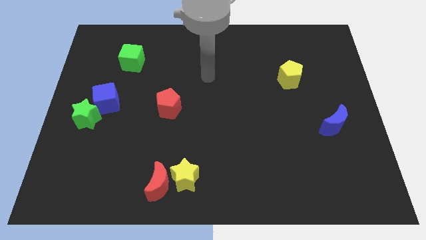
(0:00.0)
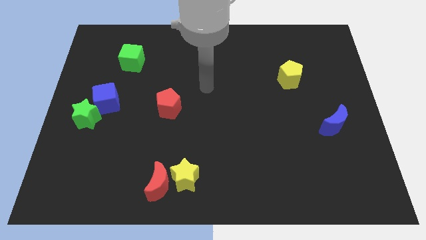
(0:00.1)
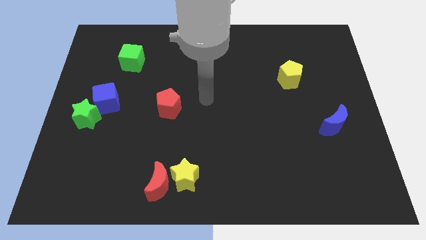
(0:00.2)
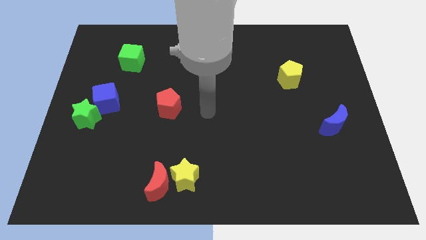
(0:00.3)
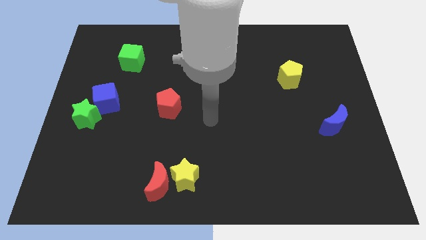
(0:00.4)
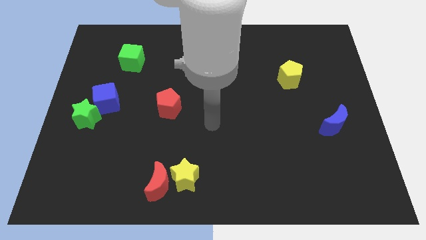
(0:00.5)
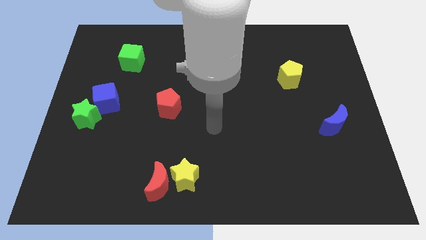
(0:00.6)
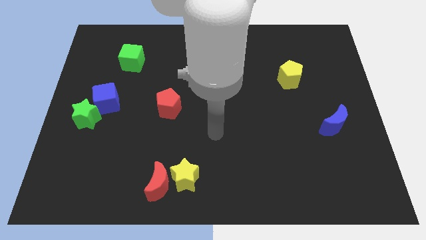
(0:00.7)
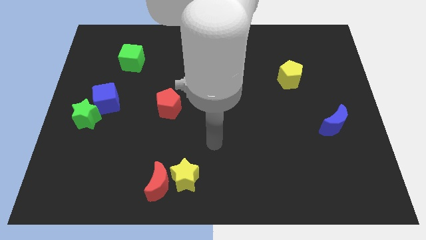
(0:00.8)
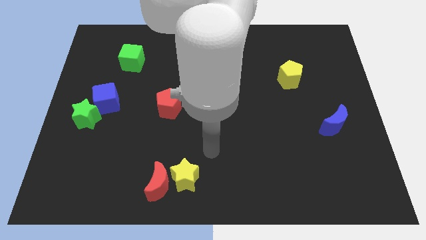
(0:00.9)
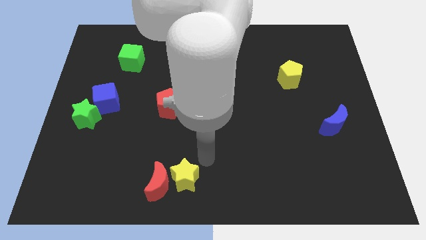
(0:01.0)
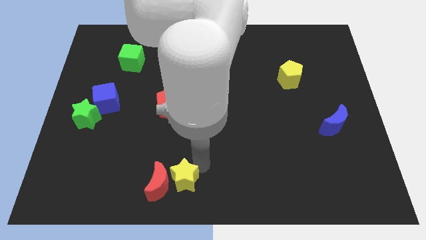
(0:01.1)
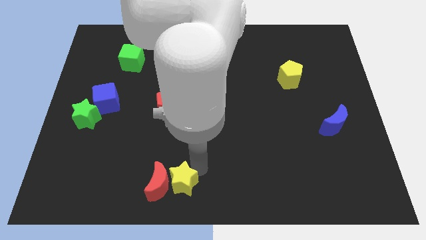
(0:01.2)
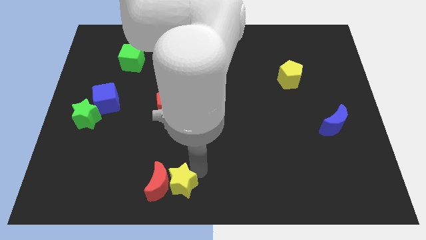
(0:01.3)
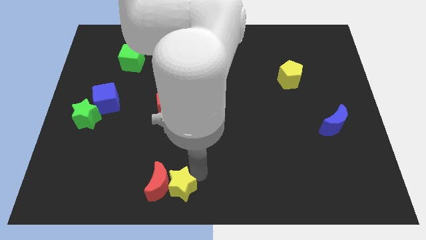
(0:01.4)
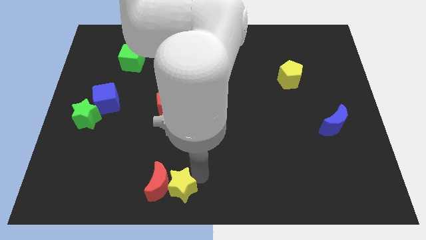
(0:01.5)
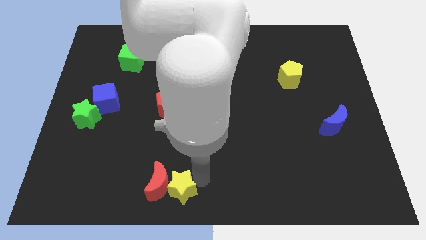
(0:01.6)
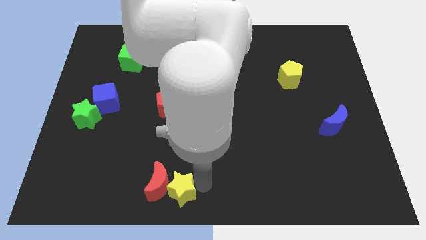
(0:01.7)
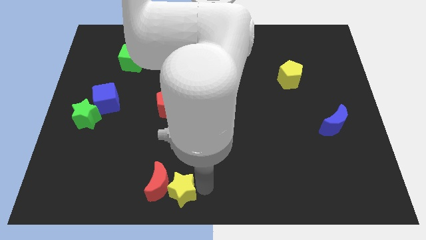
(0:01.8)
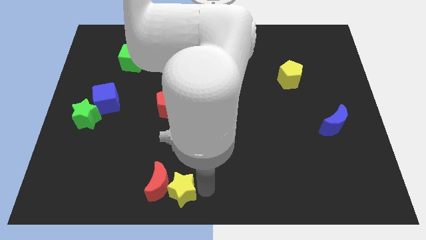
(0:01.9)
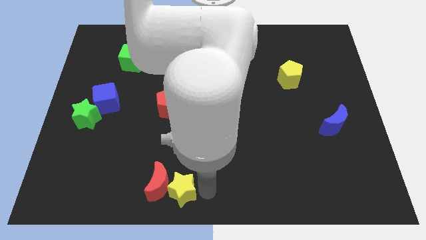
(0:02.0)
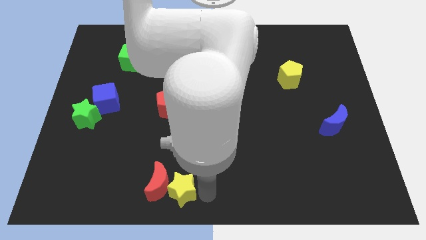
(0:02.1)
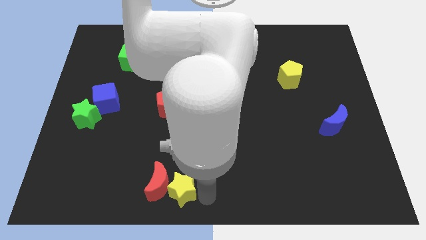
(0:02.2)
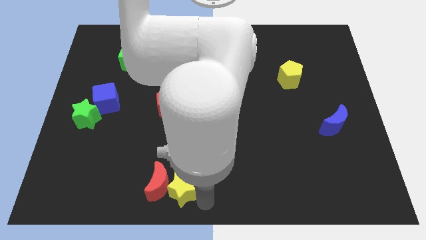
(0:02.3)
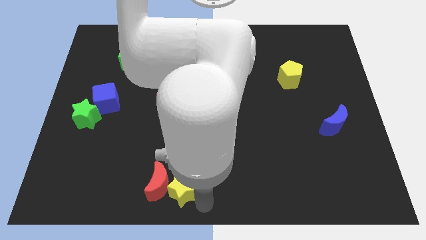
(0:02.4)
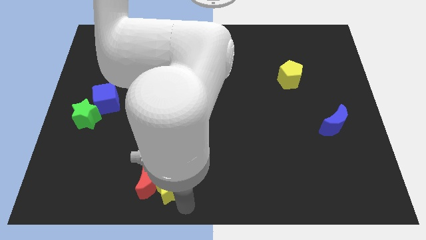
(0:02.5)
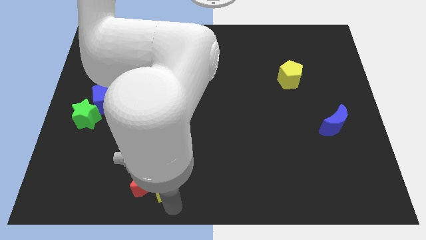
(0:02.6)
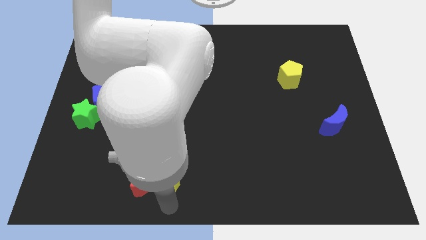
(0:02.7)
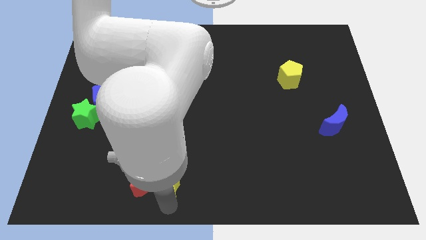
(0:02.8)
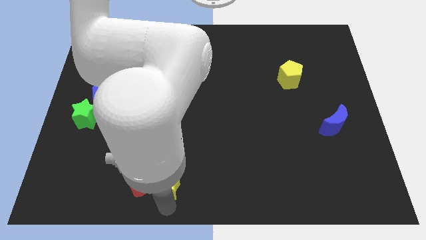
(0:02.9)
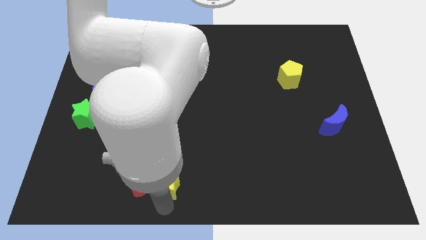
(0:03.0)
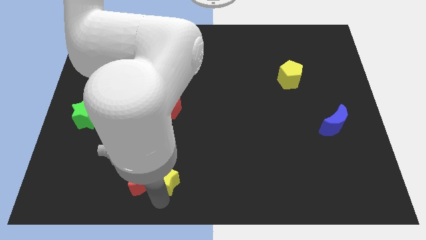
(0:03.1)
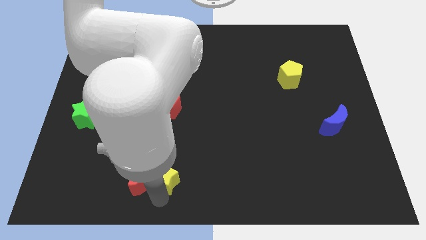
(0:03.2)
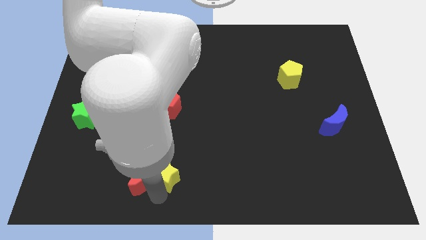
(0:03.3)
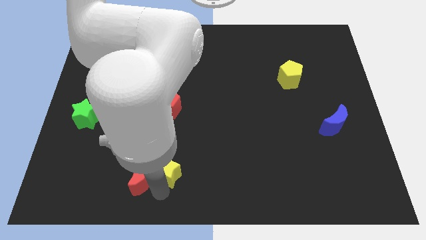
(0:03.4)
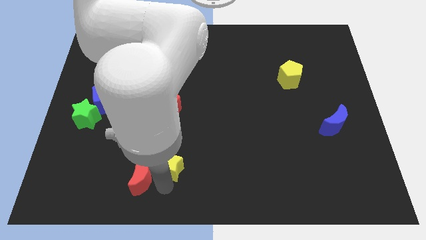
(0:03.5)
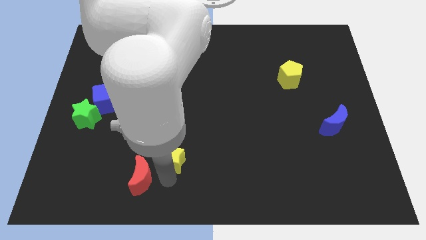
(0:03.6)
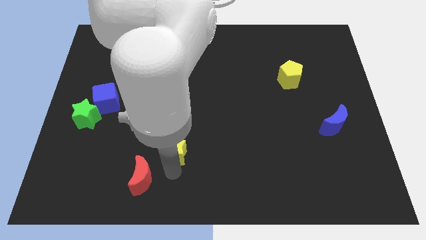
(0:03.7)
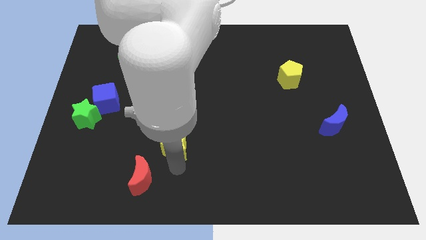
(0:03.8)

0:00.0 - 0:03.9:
push the yellow star to the top right of the red crescent

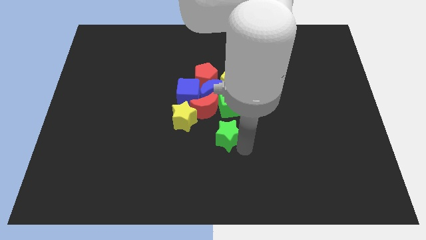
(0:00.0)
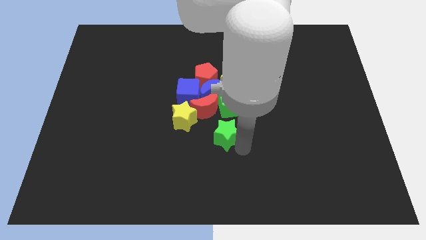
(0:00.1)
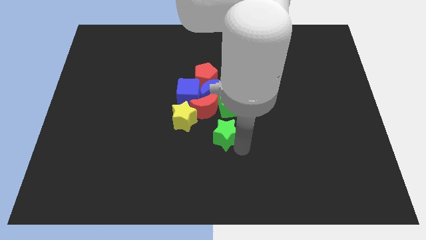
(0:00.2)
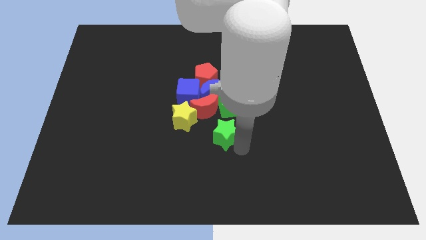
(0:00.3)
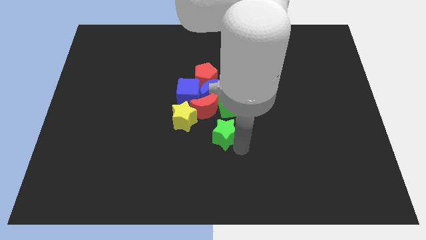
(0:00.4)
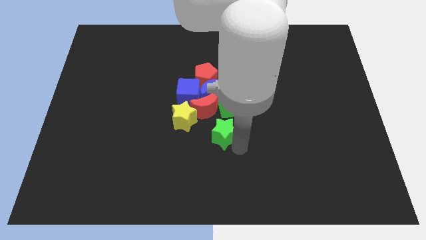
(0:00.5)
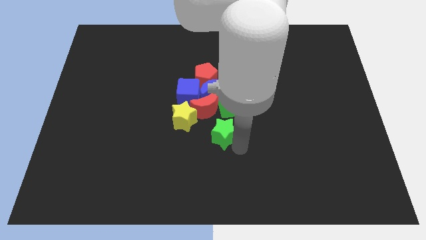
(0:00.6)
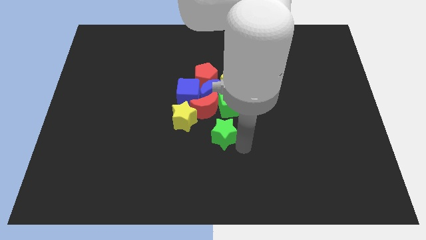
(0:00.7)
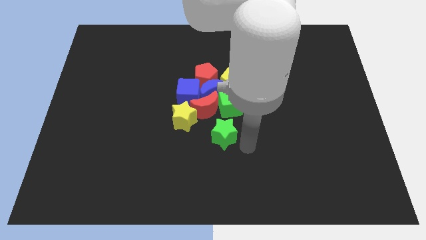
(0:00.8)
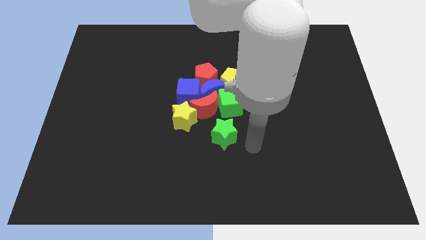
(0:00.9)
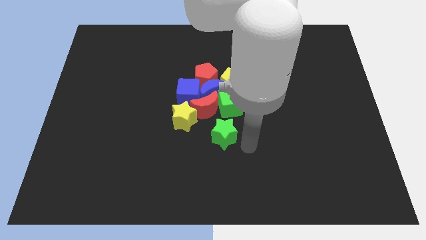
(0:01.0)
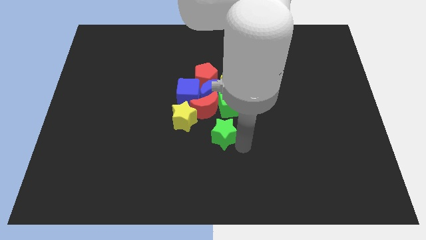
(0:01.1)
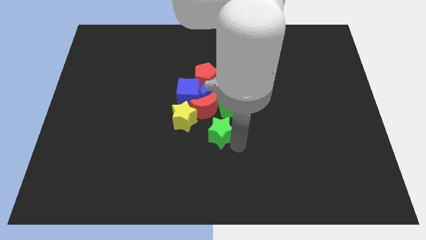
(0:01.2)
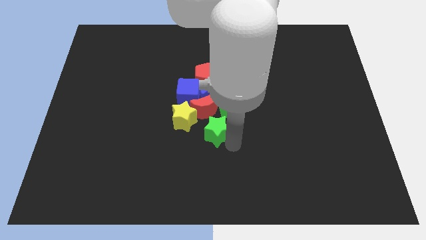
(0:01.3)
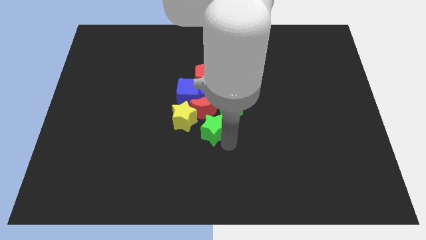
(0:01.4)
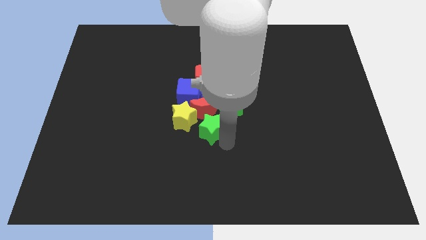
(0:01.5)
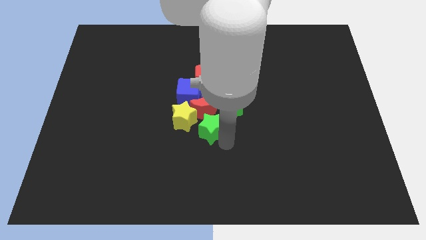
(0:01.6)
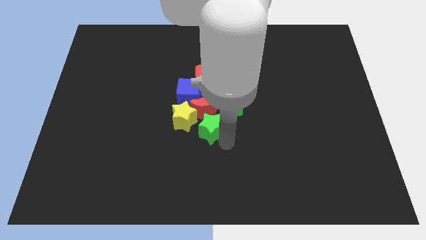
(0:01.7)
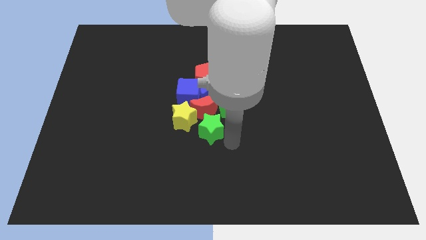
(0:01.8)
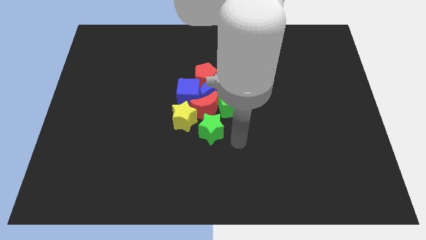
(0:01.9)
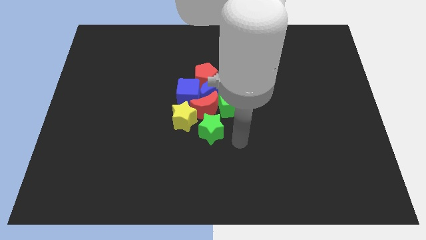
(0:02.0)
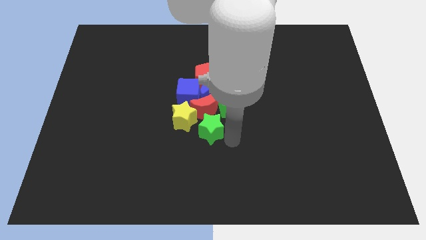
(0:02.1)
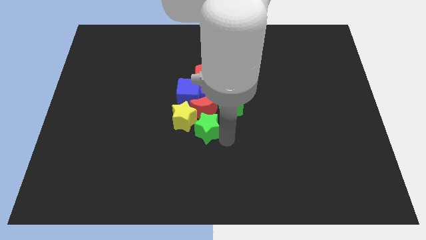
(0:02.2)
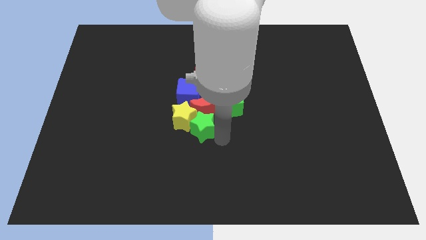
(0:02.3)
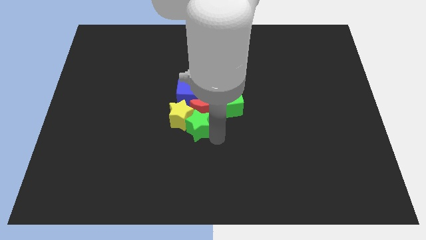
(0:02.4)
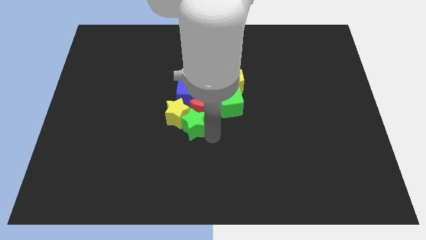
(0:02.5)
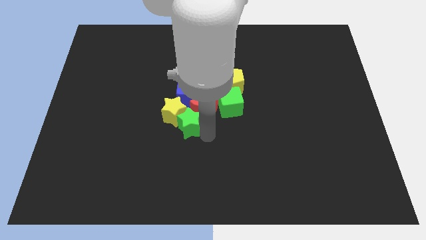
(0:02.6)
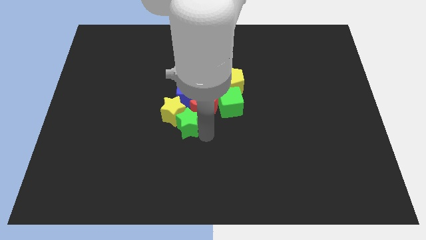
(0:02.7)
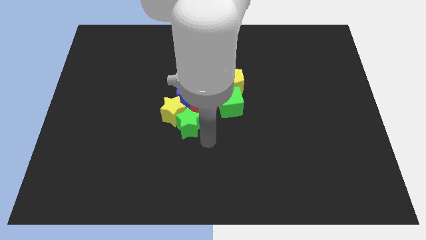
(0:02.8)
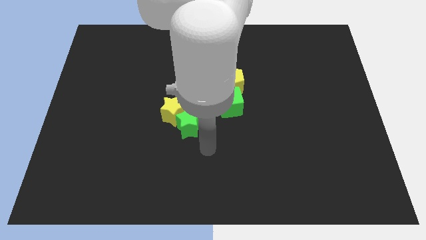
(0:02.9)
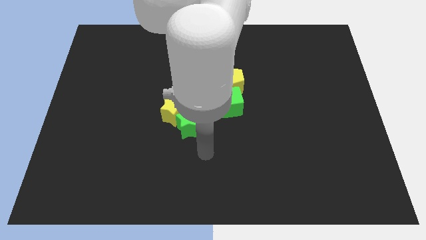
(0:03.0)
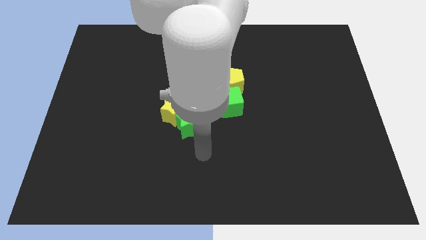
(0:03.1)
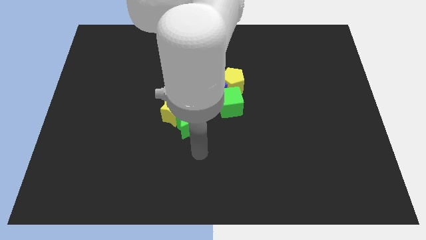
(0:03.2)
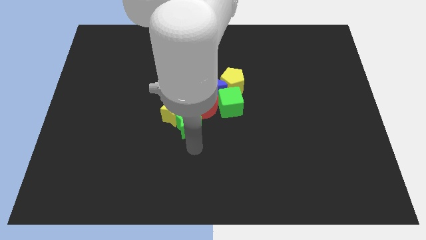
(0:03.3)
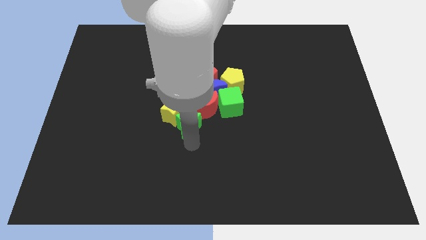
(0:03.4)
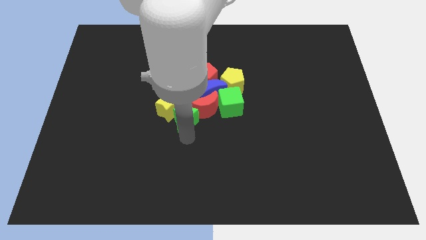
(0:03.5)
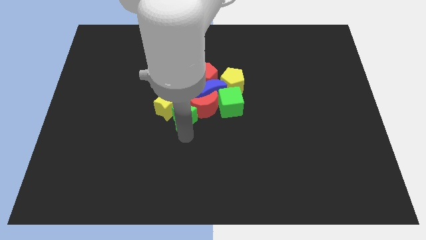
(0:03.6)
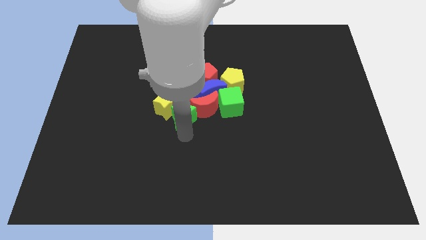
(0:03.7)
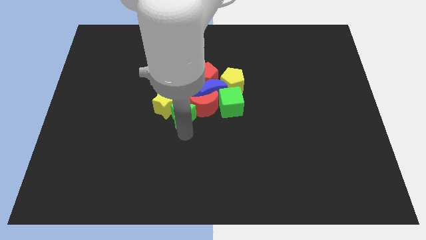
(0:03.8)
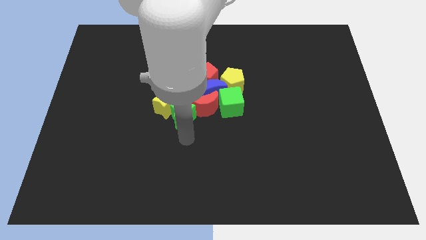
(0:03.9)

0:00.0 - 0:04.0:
place the green star in between yellow star and red crescent

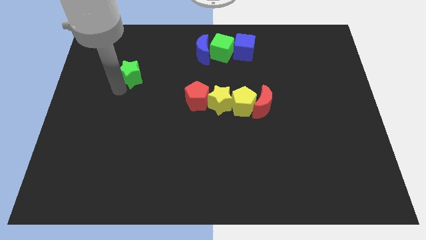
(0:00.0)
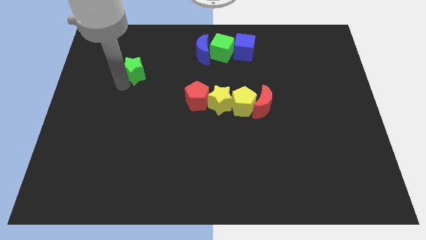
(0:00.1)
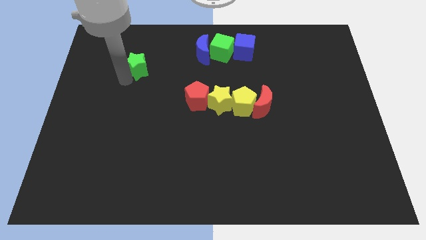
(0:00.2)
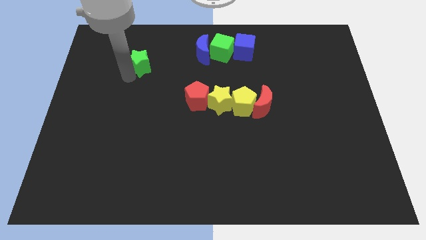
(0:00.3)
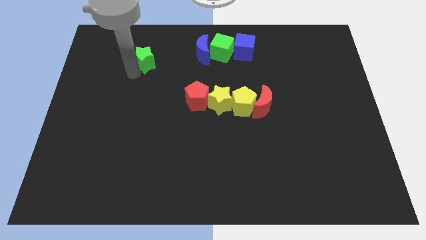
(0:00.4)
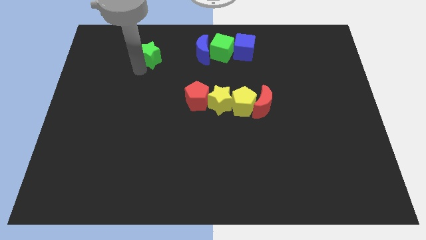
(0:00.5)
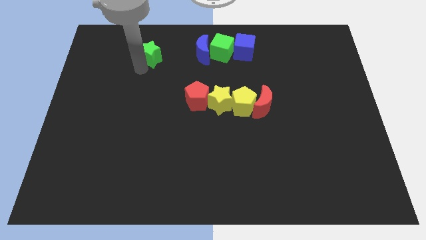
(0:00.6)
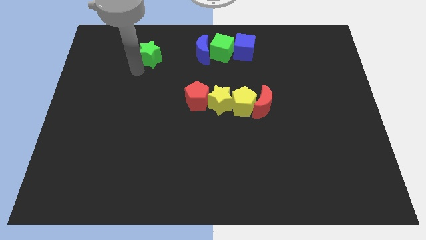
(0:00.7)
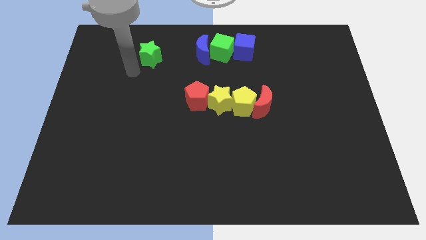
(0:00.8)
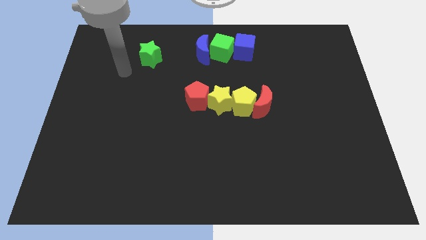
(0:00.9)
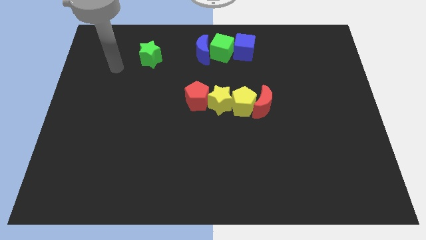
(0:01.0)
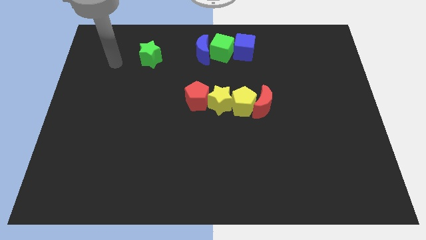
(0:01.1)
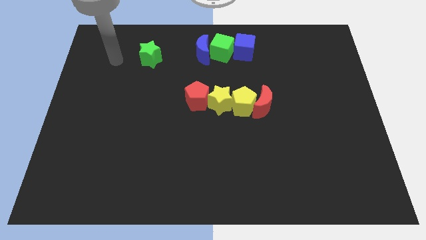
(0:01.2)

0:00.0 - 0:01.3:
move the green star horizontal parallel to the blue crescent
